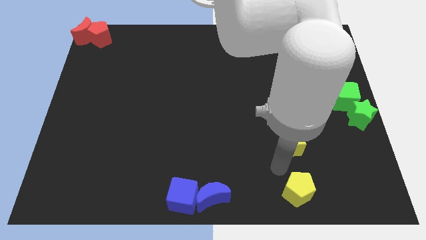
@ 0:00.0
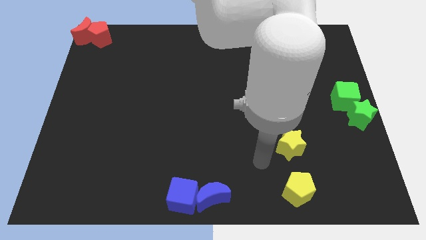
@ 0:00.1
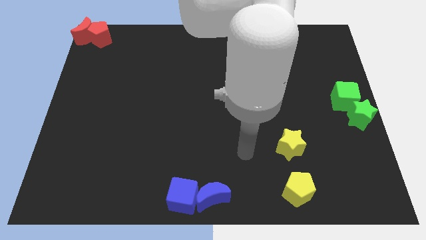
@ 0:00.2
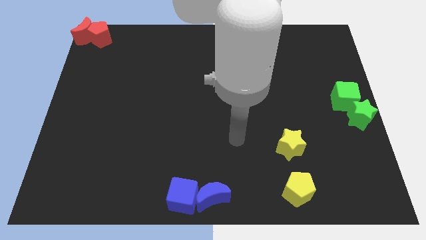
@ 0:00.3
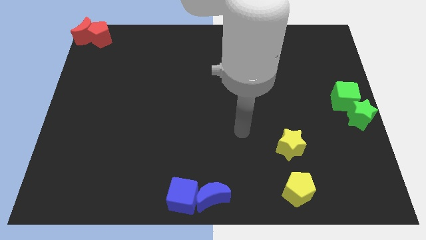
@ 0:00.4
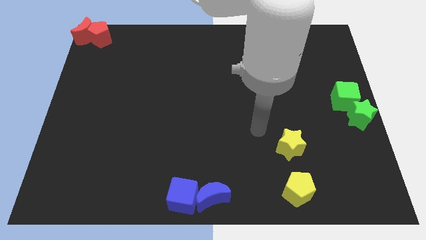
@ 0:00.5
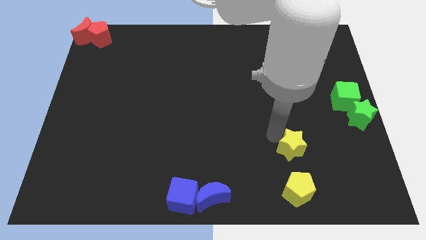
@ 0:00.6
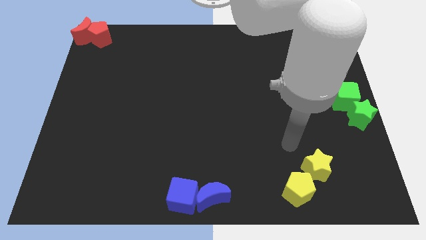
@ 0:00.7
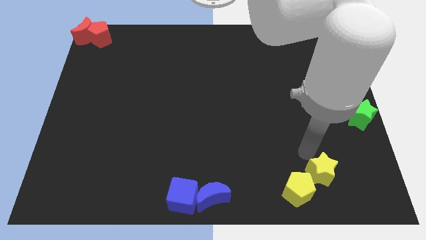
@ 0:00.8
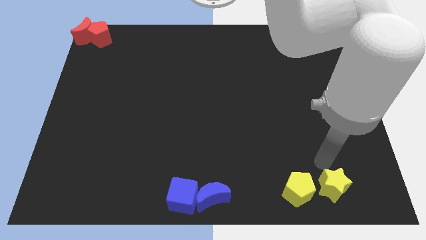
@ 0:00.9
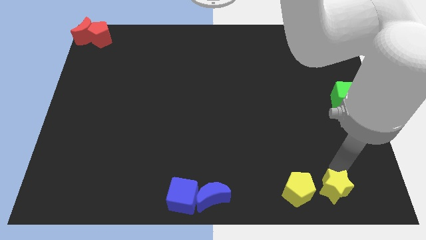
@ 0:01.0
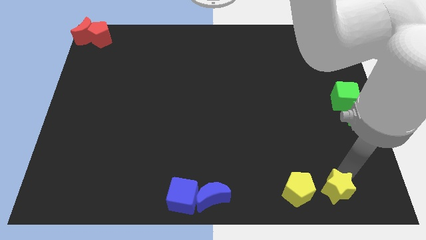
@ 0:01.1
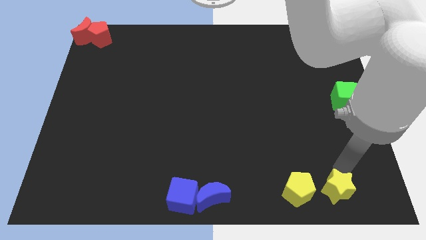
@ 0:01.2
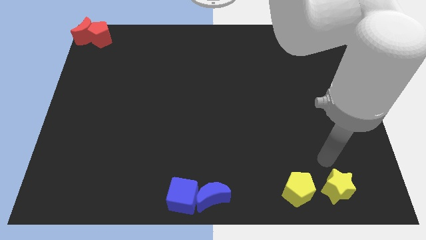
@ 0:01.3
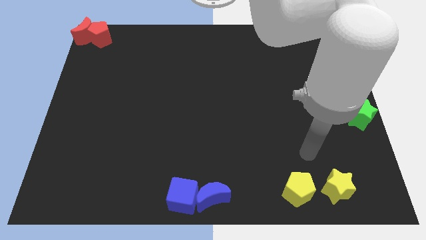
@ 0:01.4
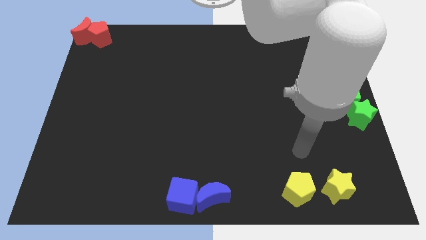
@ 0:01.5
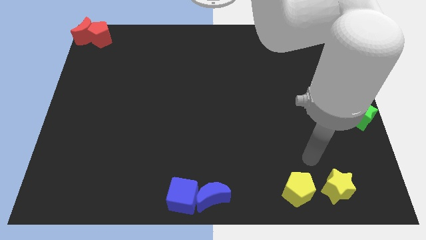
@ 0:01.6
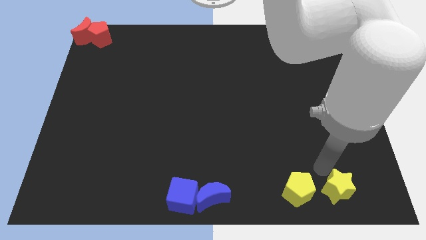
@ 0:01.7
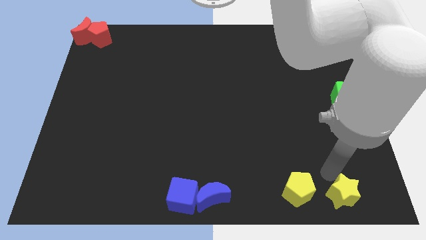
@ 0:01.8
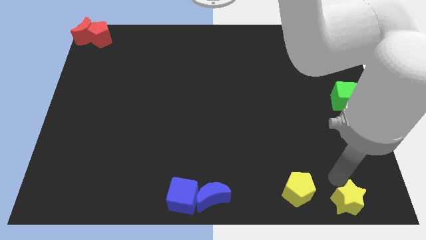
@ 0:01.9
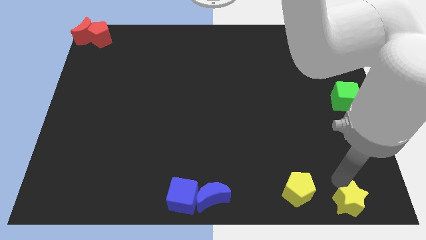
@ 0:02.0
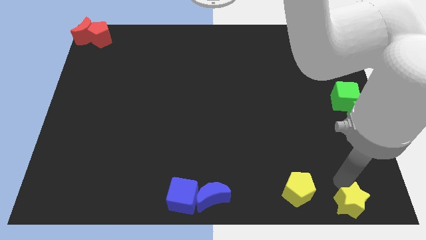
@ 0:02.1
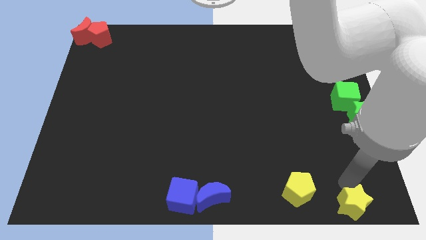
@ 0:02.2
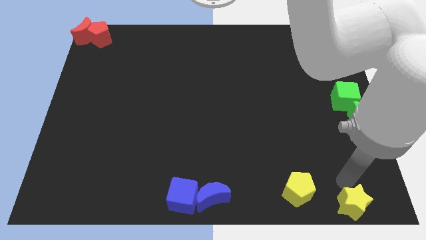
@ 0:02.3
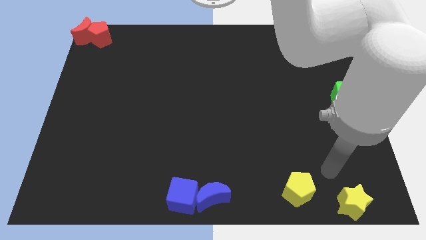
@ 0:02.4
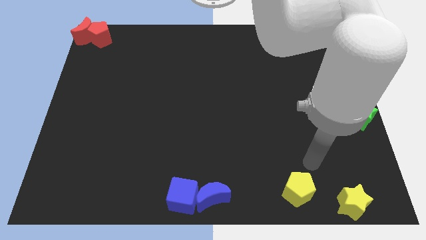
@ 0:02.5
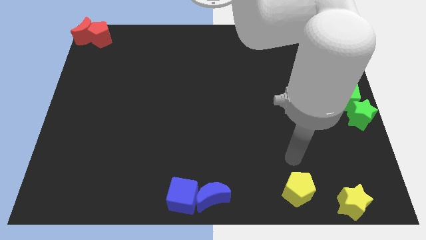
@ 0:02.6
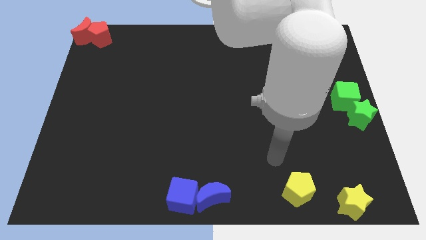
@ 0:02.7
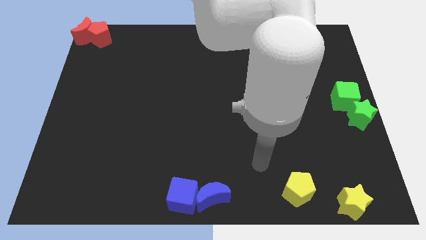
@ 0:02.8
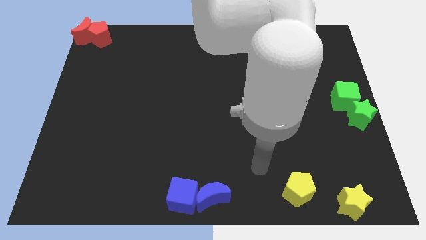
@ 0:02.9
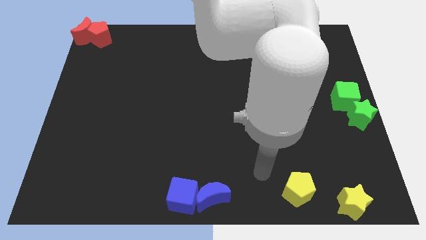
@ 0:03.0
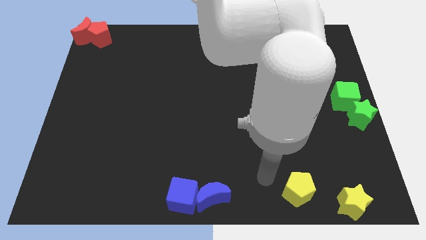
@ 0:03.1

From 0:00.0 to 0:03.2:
place the yellow star towards the bottom right of the board

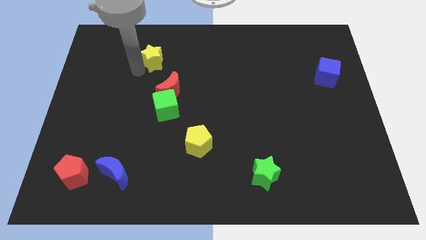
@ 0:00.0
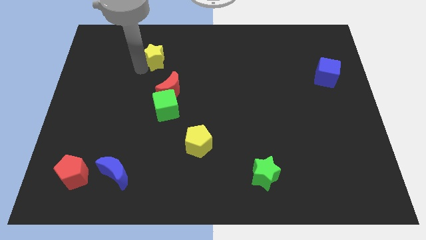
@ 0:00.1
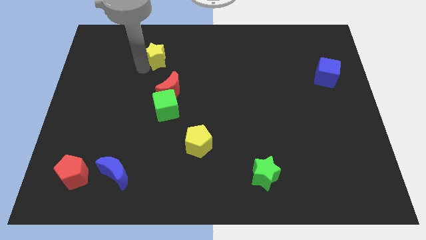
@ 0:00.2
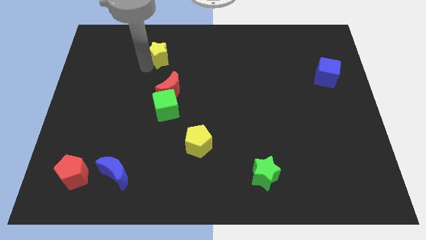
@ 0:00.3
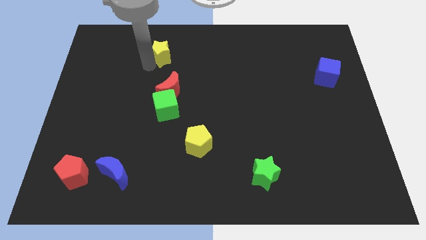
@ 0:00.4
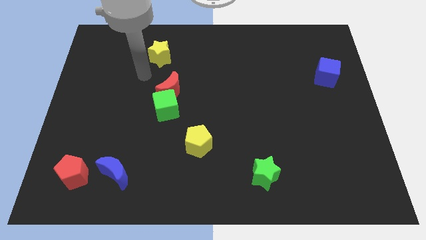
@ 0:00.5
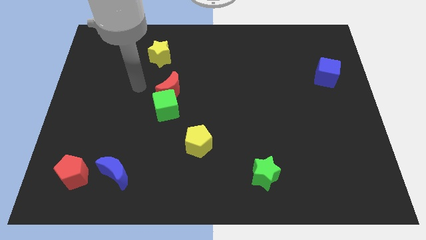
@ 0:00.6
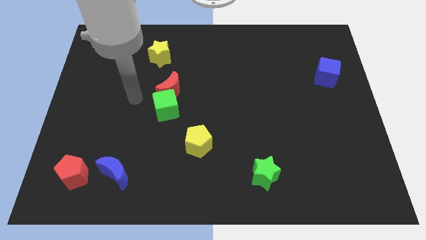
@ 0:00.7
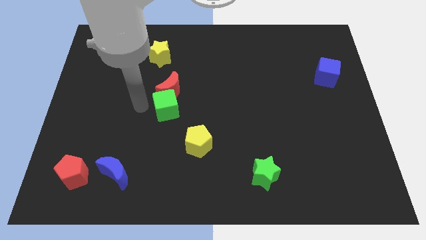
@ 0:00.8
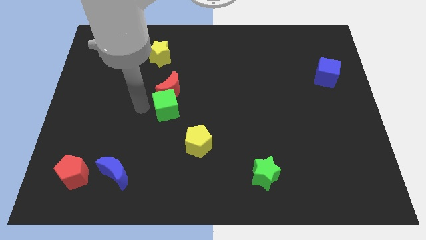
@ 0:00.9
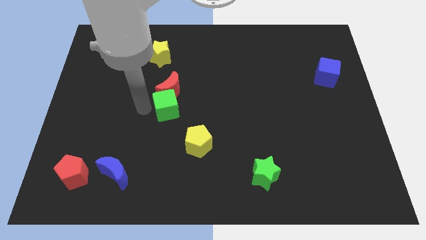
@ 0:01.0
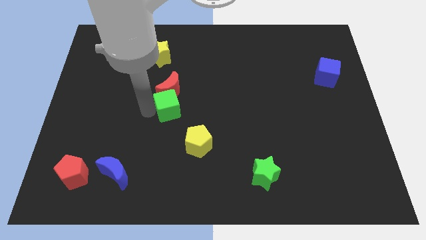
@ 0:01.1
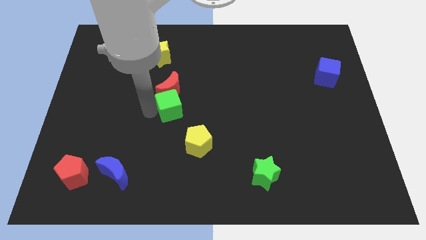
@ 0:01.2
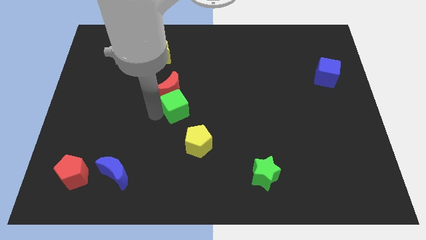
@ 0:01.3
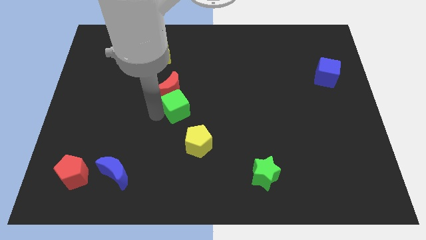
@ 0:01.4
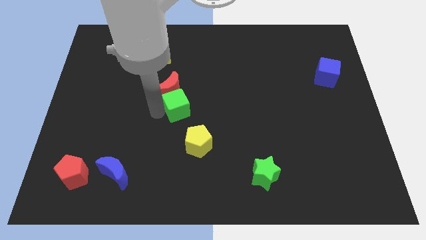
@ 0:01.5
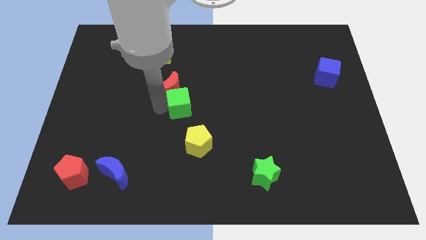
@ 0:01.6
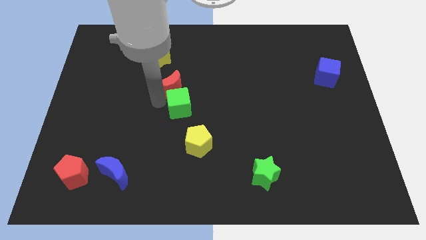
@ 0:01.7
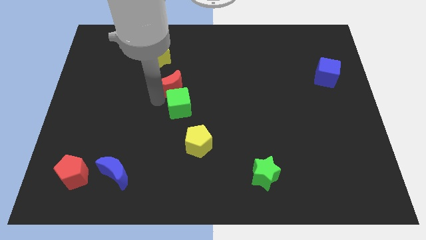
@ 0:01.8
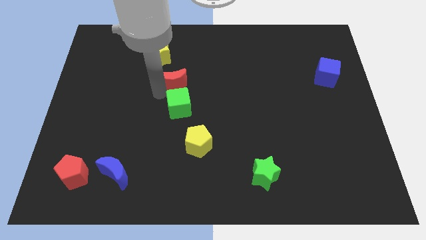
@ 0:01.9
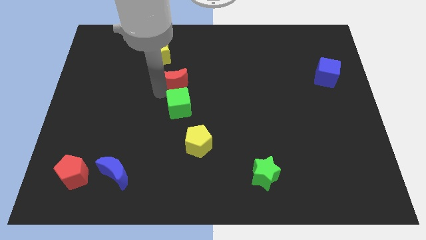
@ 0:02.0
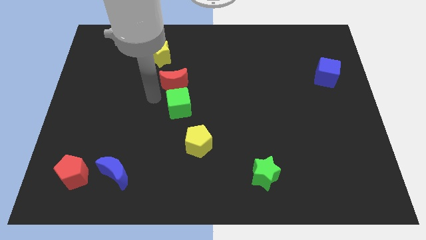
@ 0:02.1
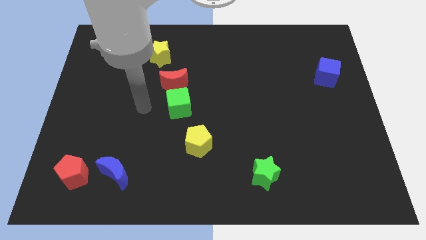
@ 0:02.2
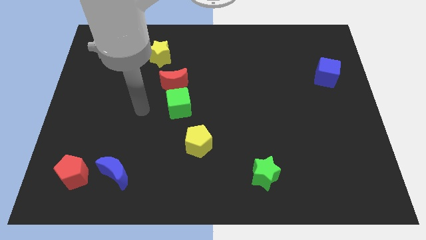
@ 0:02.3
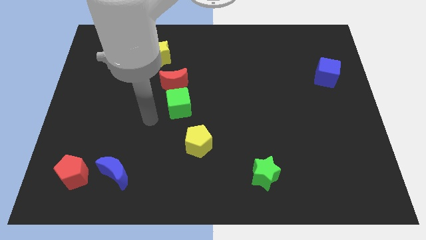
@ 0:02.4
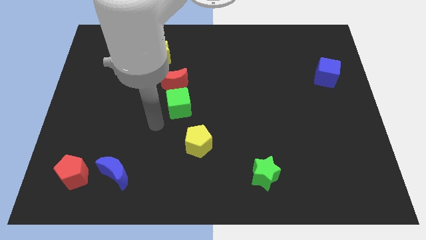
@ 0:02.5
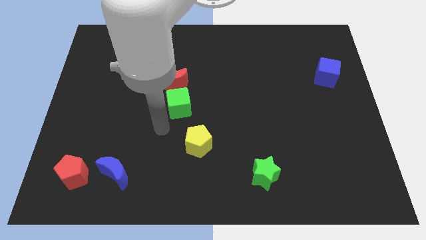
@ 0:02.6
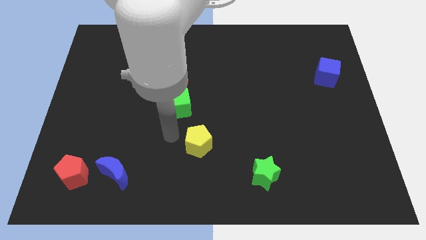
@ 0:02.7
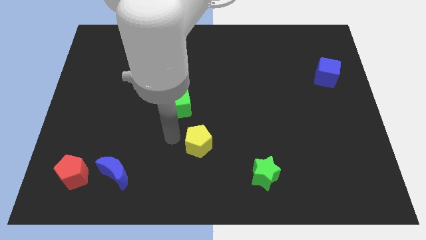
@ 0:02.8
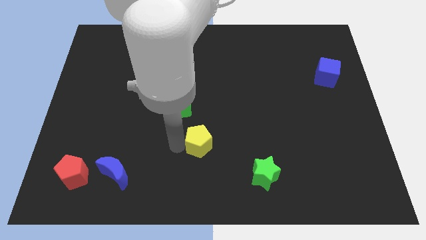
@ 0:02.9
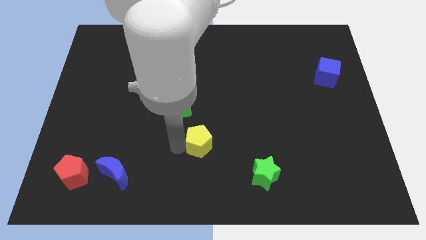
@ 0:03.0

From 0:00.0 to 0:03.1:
slide yellow star red moon and green cube slightly towards right

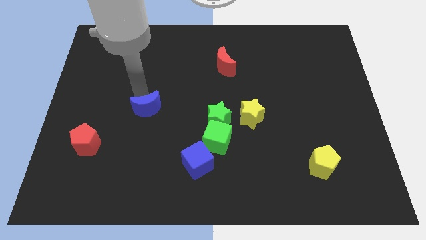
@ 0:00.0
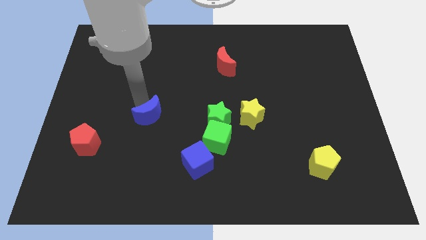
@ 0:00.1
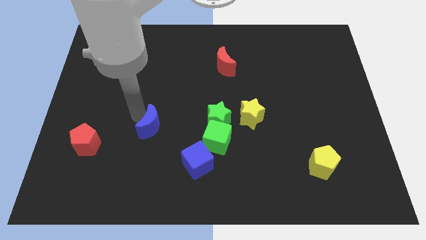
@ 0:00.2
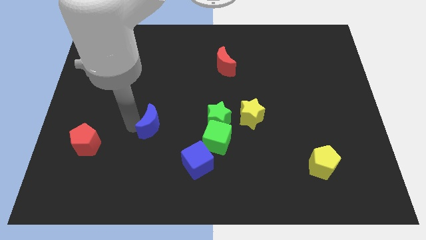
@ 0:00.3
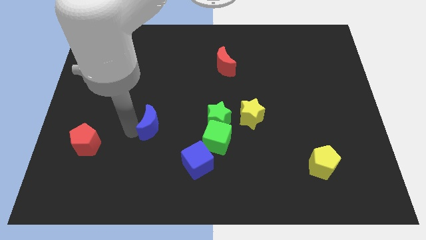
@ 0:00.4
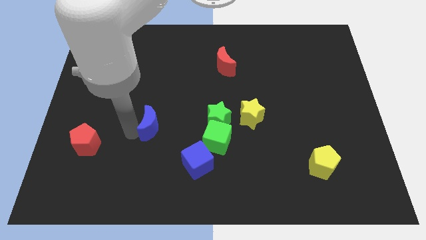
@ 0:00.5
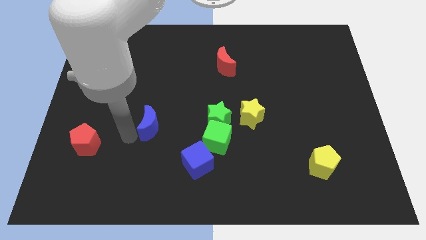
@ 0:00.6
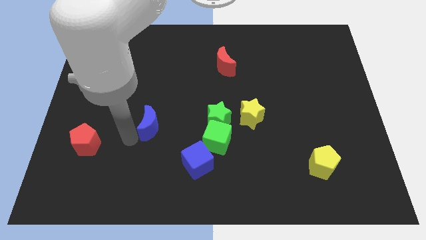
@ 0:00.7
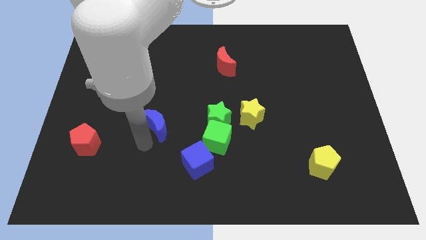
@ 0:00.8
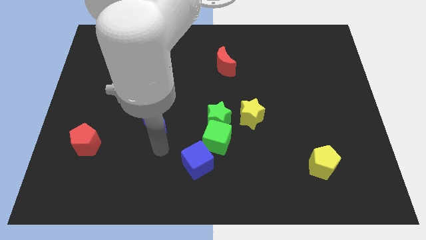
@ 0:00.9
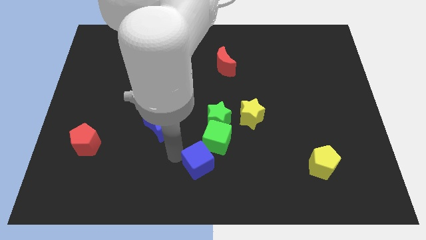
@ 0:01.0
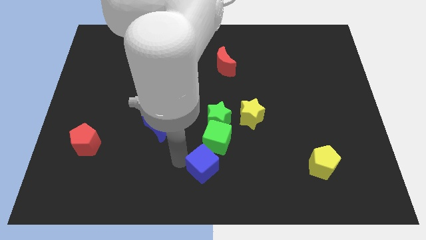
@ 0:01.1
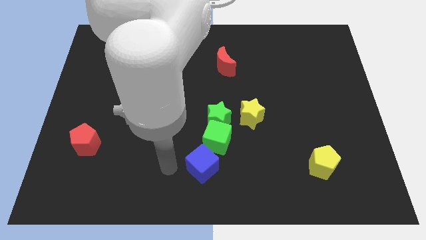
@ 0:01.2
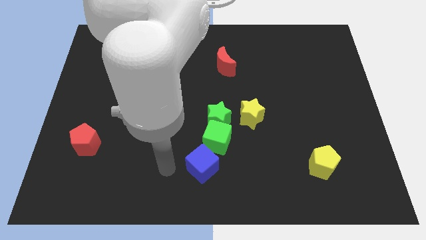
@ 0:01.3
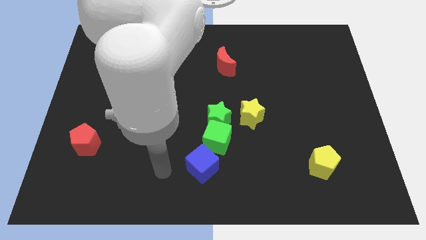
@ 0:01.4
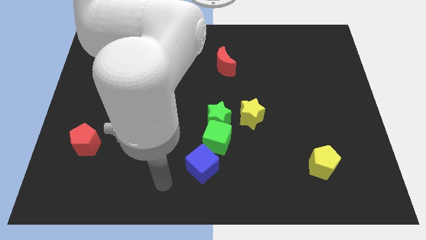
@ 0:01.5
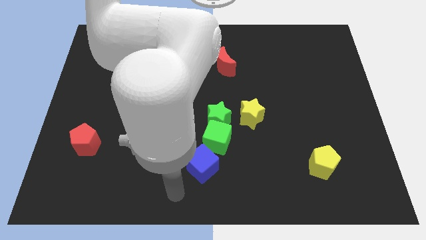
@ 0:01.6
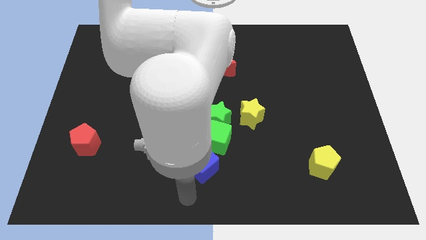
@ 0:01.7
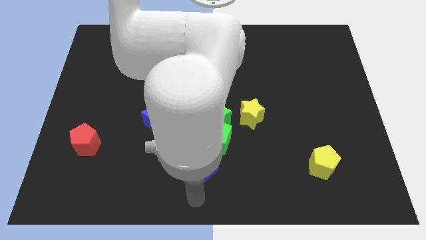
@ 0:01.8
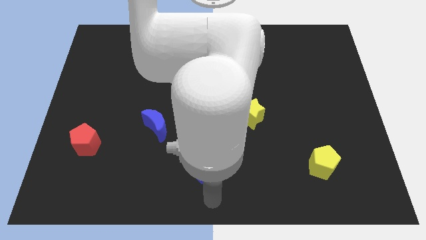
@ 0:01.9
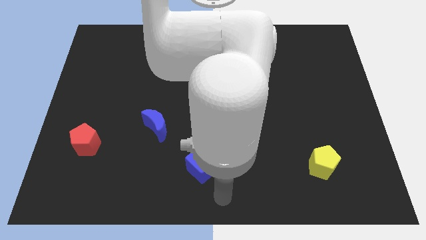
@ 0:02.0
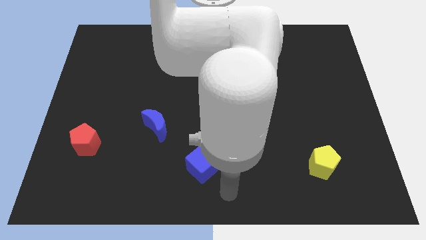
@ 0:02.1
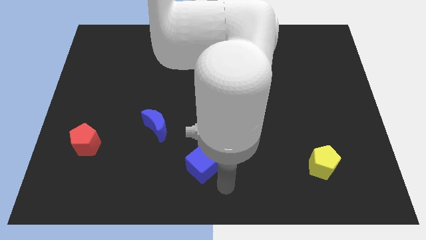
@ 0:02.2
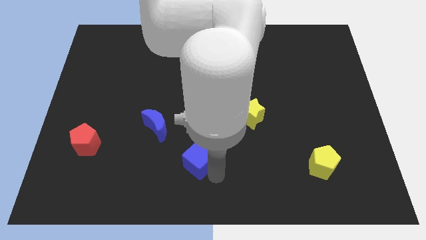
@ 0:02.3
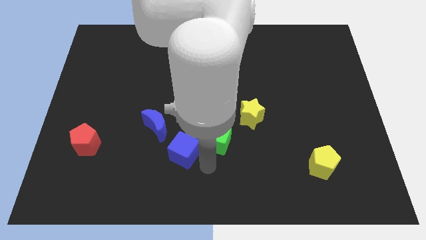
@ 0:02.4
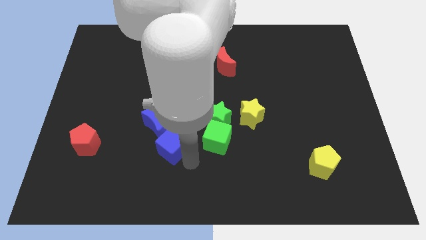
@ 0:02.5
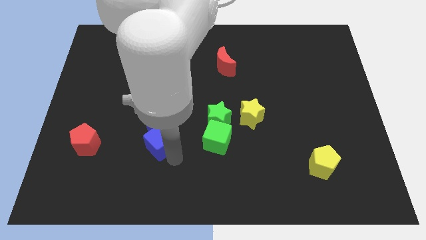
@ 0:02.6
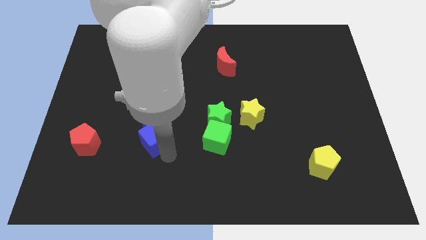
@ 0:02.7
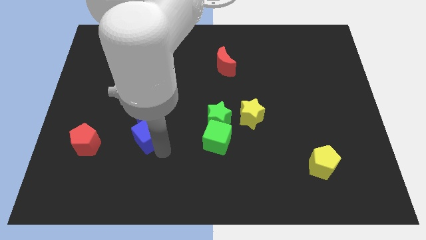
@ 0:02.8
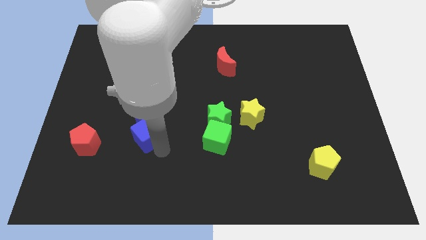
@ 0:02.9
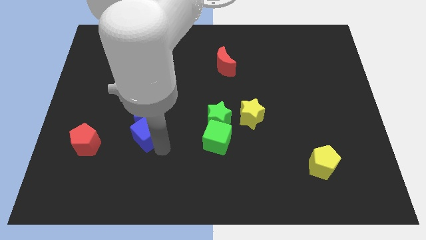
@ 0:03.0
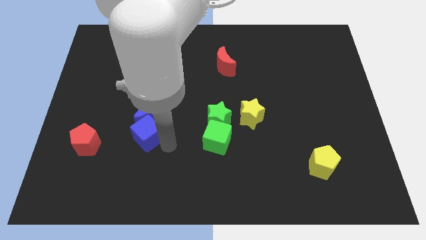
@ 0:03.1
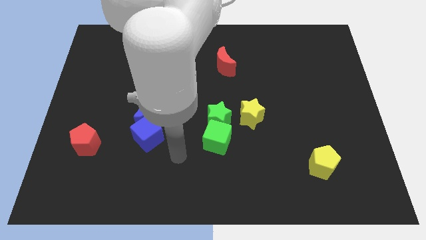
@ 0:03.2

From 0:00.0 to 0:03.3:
move the blue cube to the bottom right side of the blue moon
